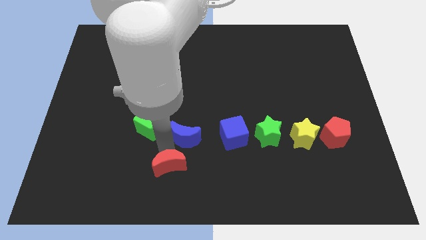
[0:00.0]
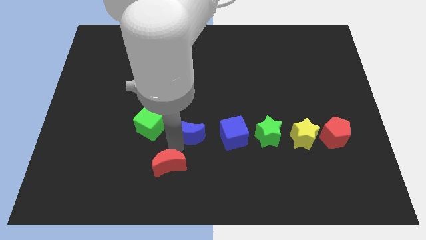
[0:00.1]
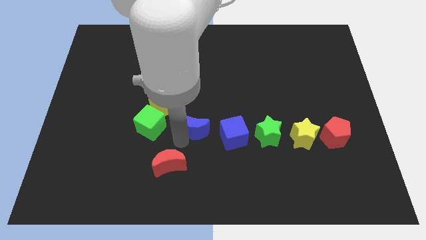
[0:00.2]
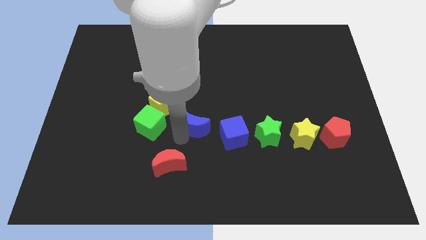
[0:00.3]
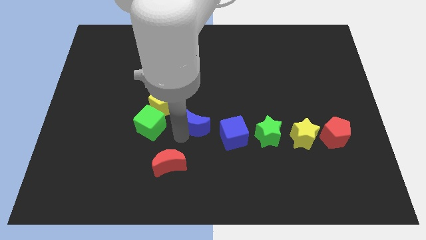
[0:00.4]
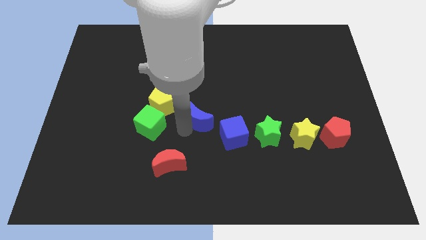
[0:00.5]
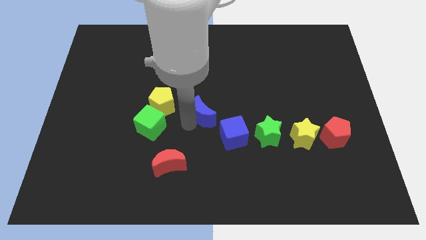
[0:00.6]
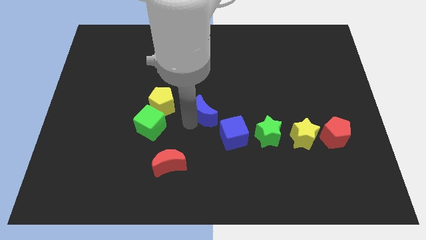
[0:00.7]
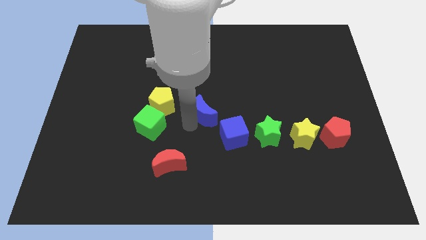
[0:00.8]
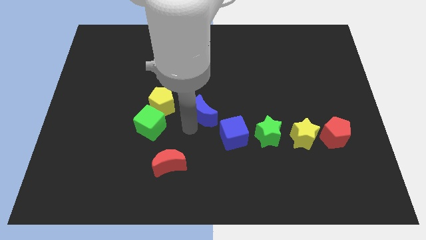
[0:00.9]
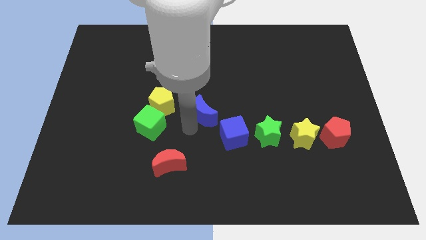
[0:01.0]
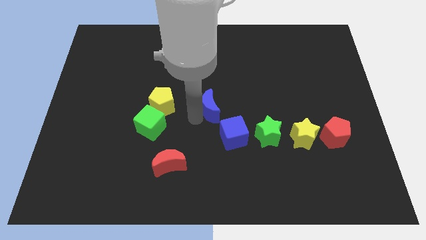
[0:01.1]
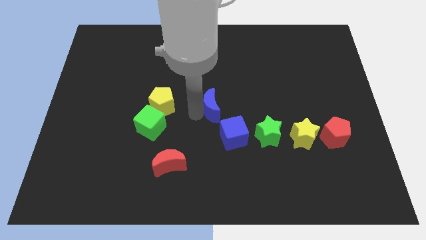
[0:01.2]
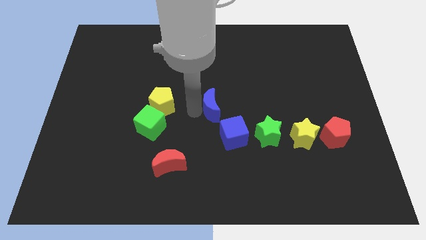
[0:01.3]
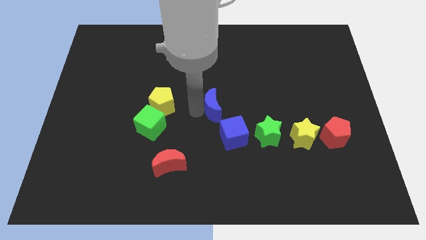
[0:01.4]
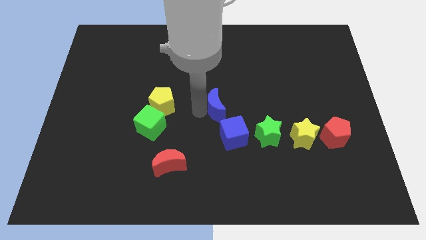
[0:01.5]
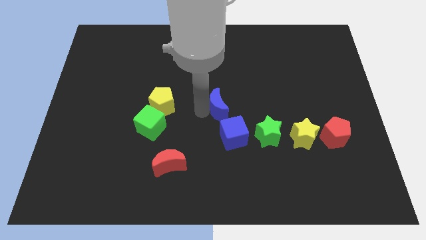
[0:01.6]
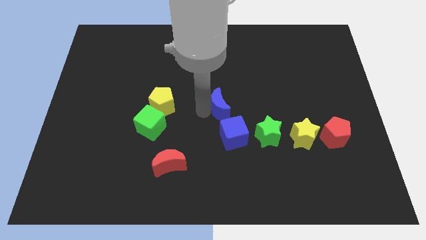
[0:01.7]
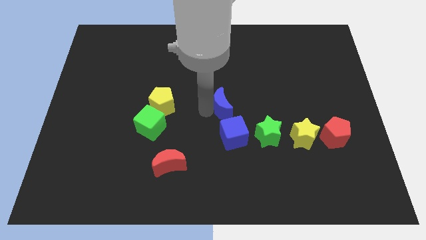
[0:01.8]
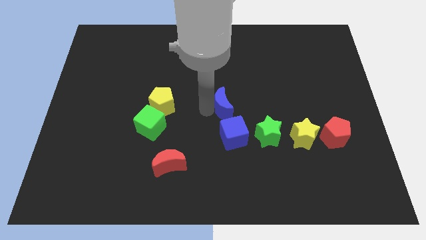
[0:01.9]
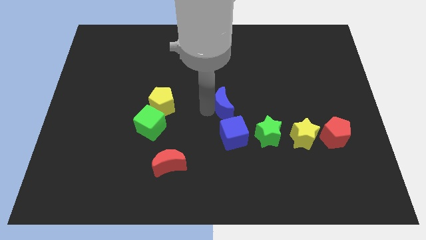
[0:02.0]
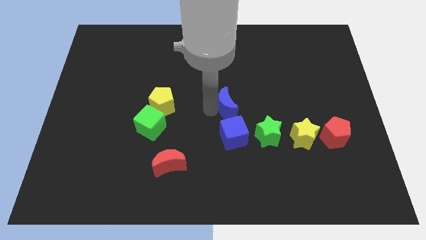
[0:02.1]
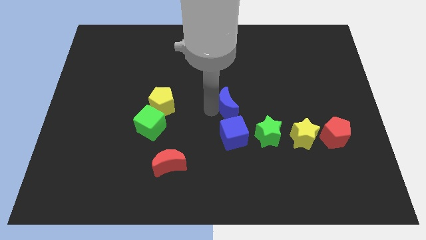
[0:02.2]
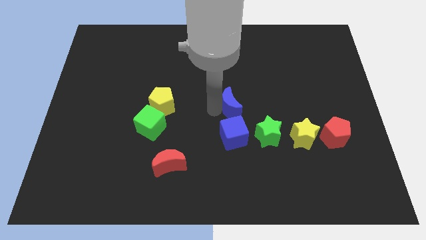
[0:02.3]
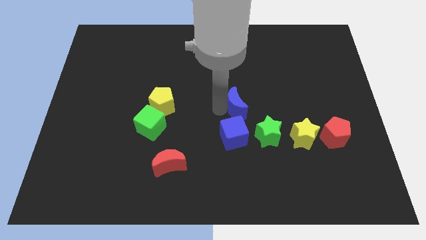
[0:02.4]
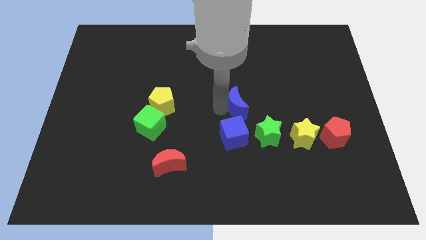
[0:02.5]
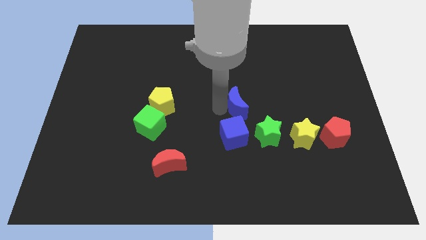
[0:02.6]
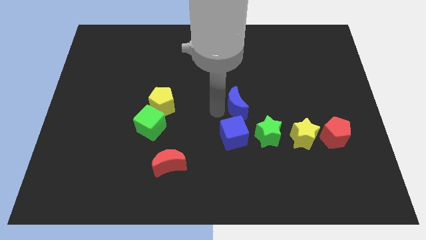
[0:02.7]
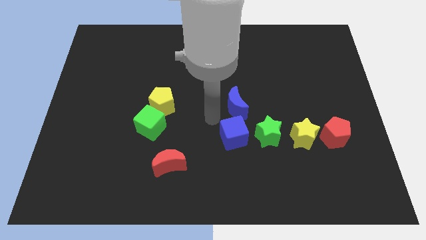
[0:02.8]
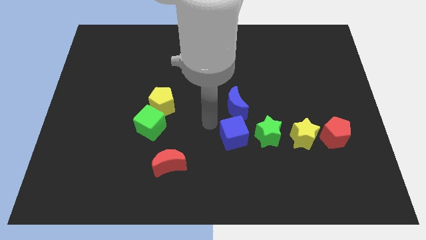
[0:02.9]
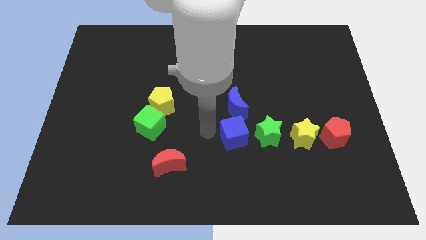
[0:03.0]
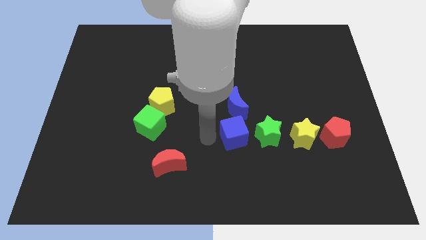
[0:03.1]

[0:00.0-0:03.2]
push the blue crescent above the blue cube

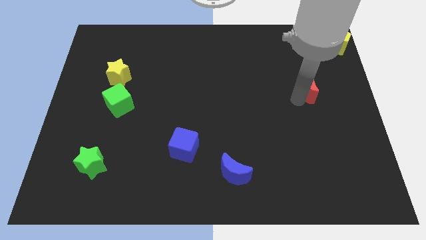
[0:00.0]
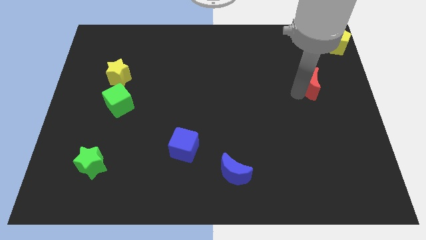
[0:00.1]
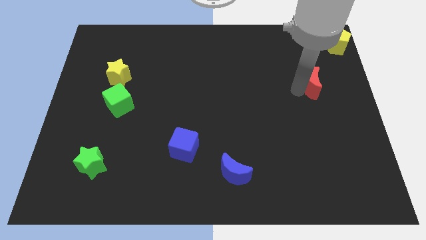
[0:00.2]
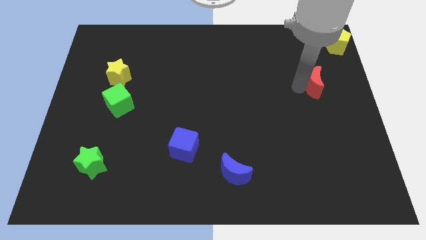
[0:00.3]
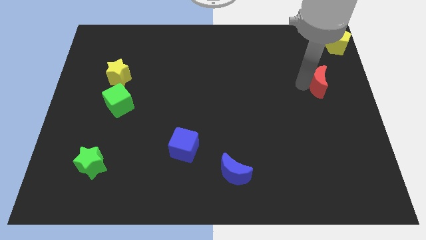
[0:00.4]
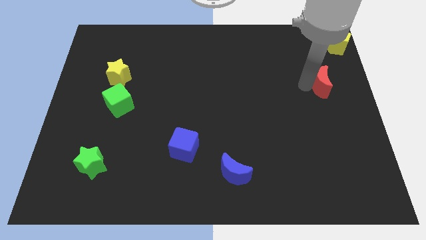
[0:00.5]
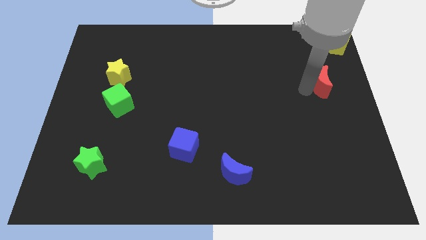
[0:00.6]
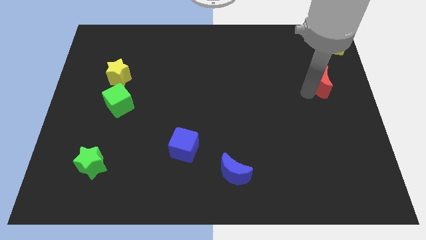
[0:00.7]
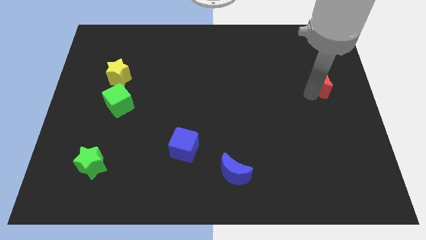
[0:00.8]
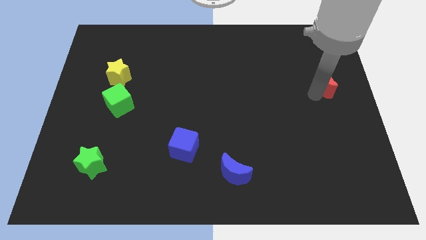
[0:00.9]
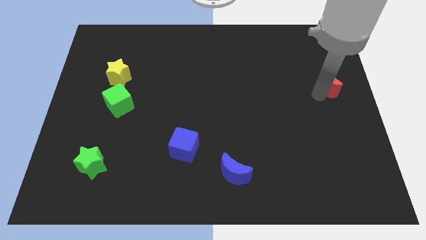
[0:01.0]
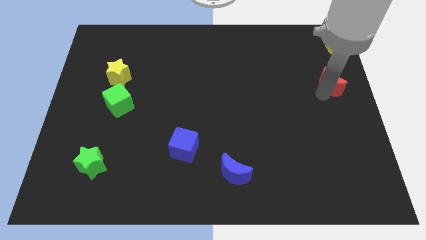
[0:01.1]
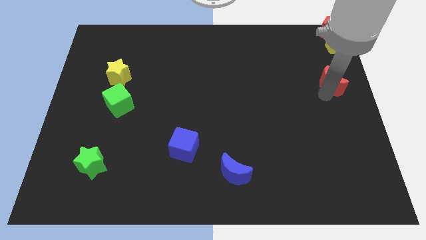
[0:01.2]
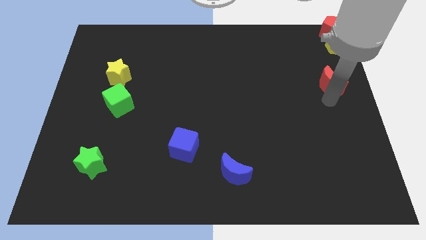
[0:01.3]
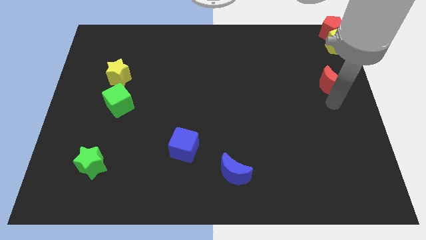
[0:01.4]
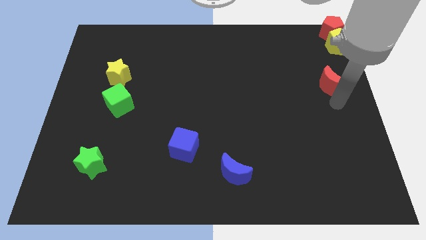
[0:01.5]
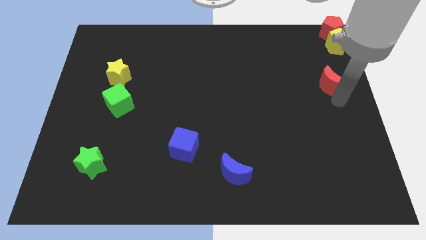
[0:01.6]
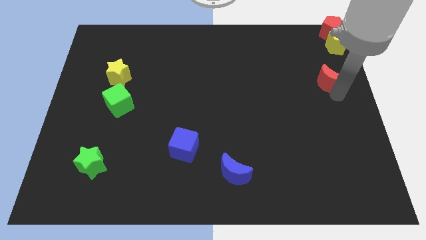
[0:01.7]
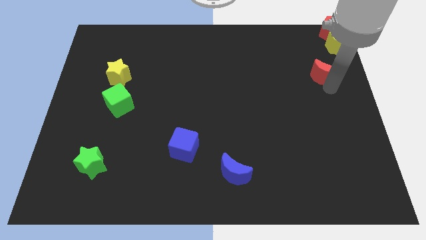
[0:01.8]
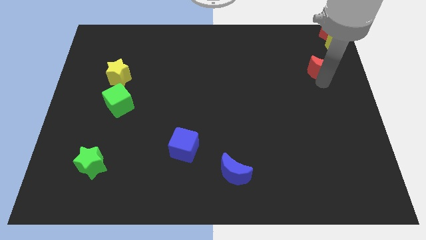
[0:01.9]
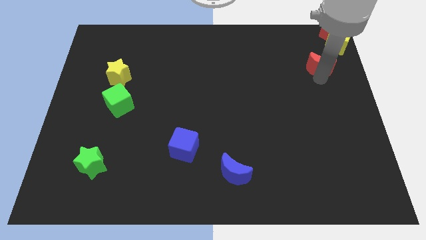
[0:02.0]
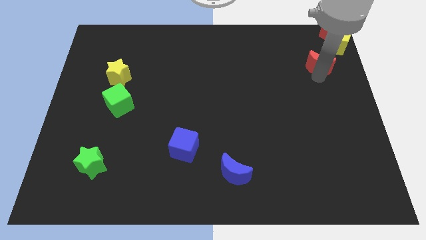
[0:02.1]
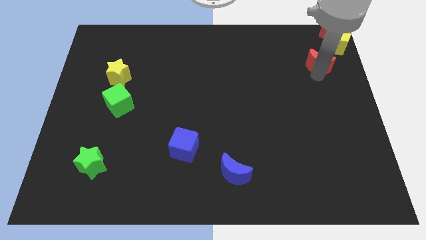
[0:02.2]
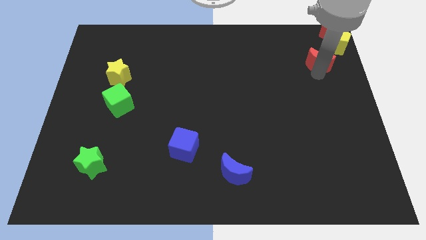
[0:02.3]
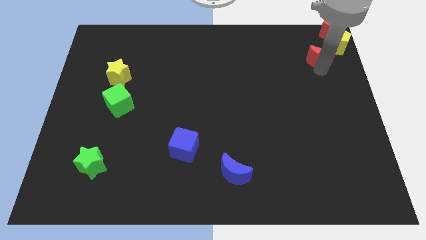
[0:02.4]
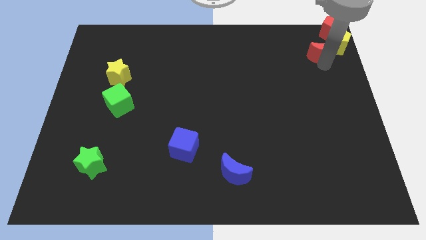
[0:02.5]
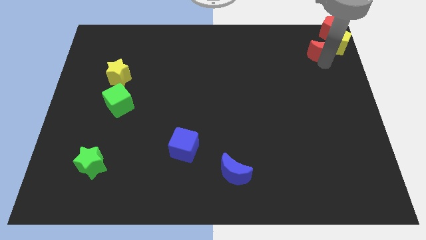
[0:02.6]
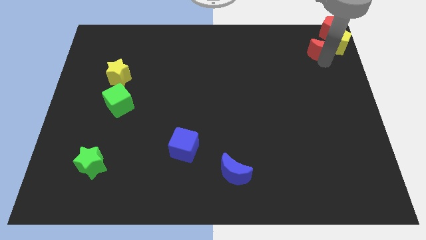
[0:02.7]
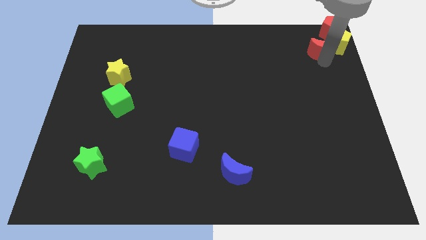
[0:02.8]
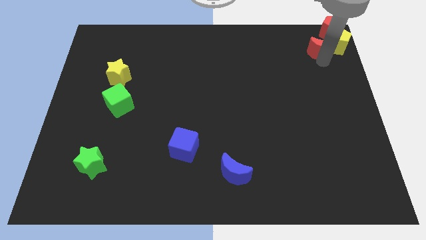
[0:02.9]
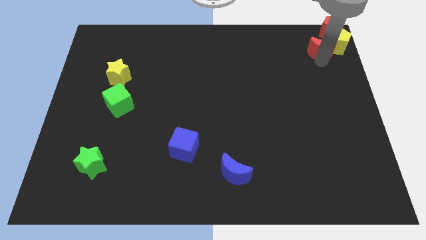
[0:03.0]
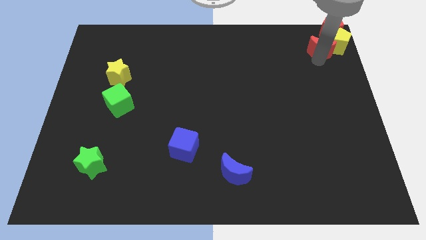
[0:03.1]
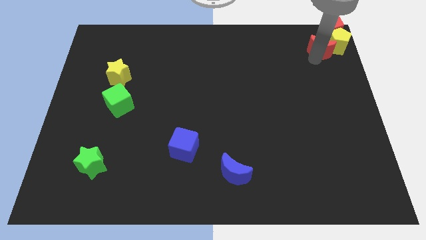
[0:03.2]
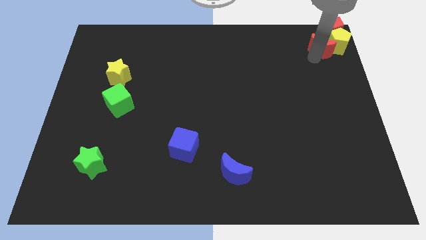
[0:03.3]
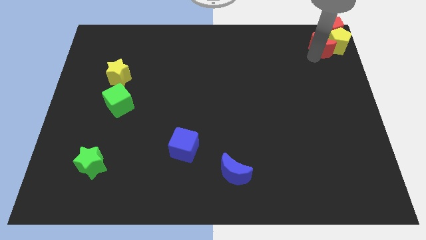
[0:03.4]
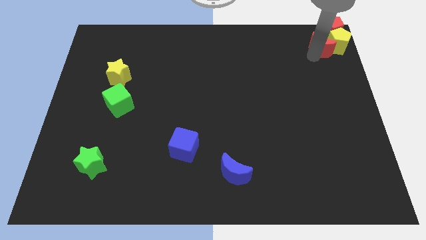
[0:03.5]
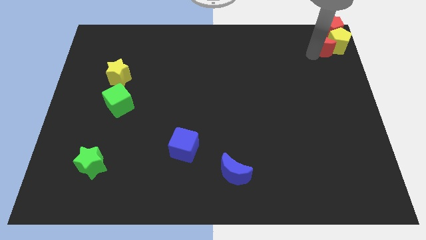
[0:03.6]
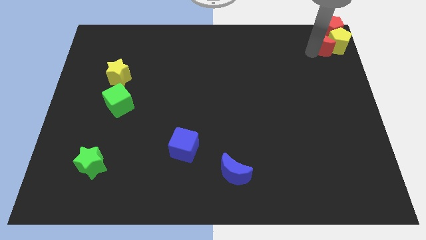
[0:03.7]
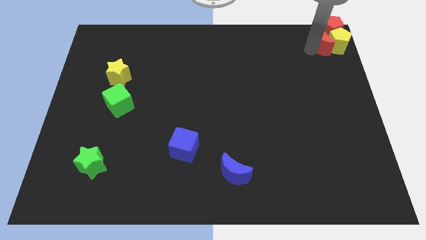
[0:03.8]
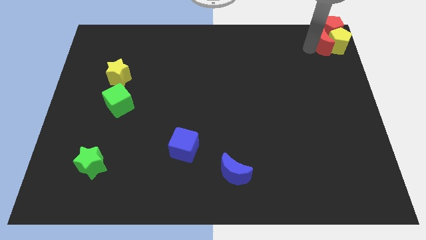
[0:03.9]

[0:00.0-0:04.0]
place the red crescent into the red and yellow pentagon

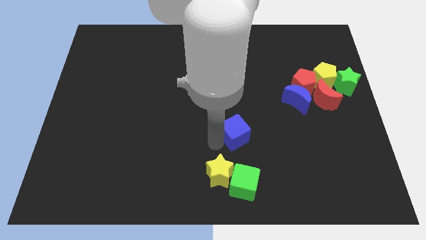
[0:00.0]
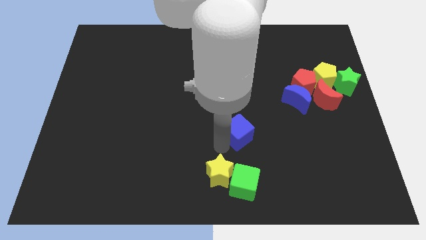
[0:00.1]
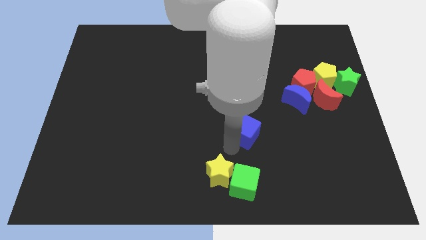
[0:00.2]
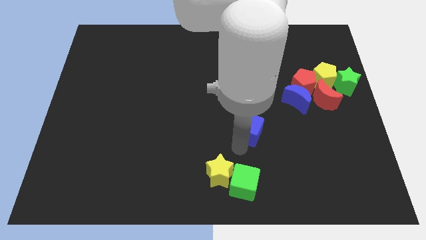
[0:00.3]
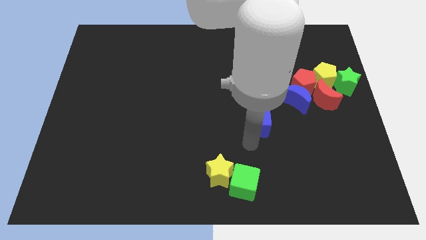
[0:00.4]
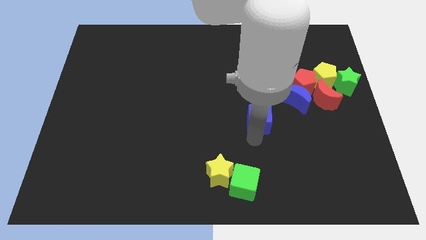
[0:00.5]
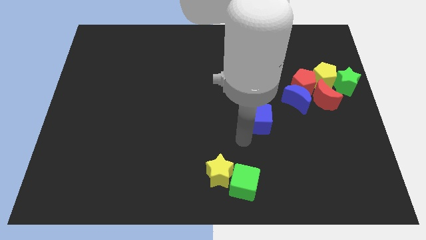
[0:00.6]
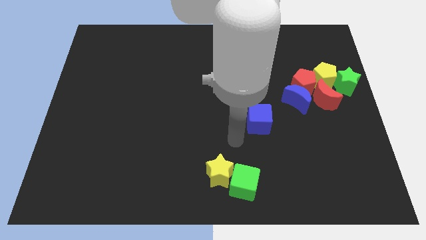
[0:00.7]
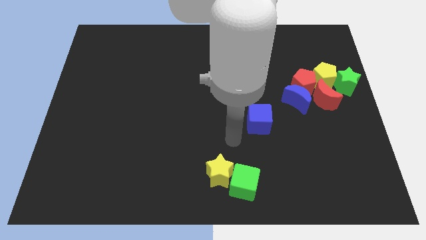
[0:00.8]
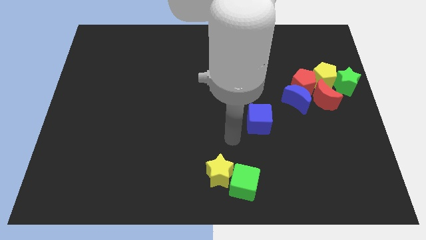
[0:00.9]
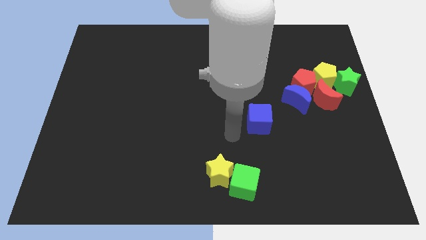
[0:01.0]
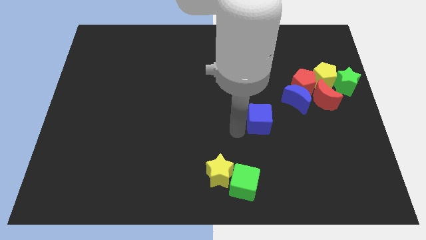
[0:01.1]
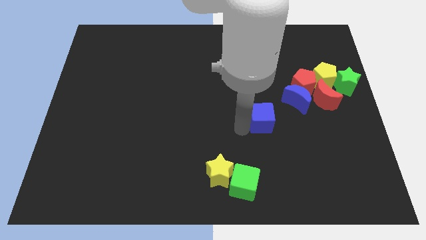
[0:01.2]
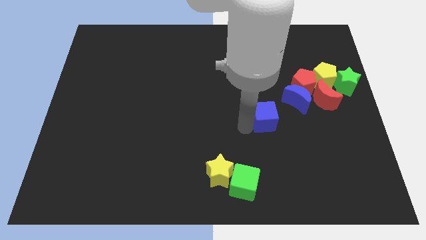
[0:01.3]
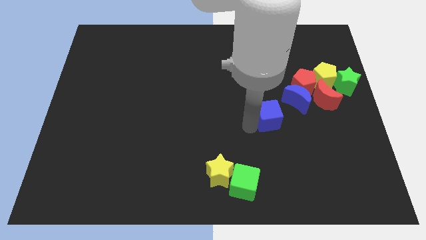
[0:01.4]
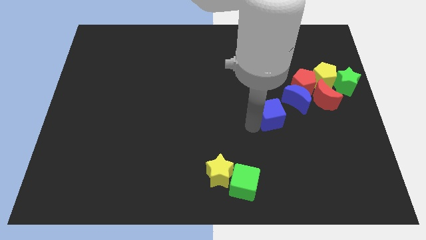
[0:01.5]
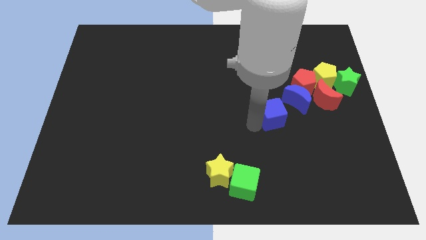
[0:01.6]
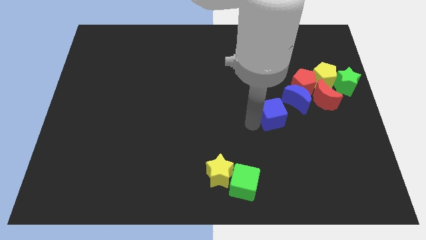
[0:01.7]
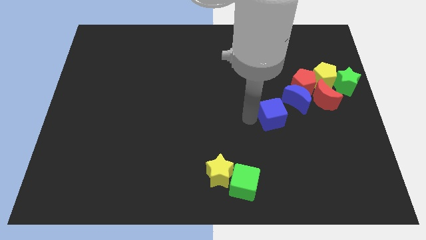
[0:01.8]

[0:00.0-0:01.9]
place blue cube to bottom left of blue moon
